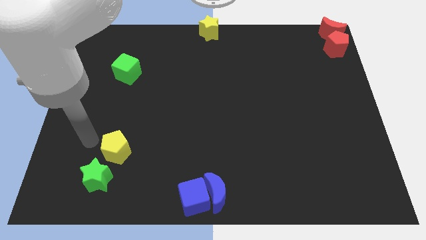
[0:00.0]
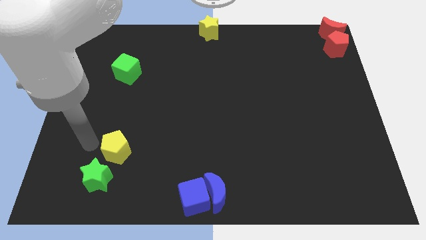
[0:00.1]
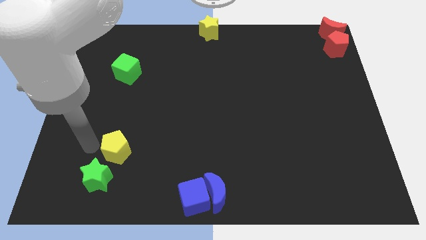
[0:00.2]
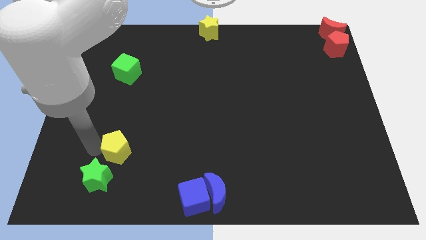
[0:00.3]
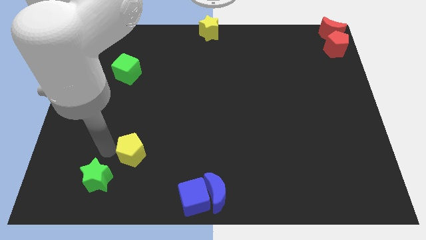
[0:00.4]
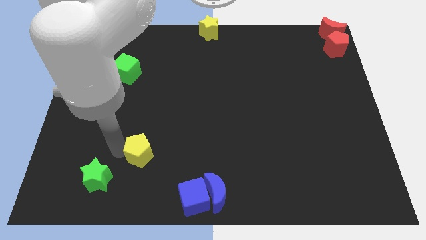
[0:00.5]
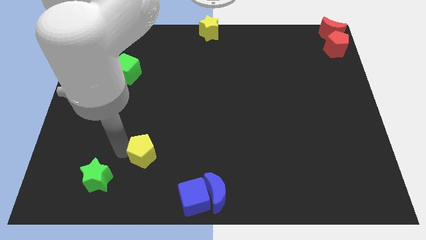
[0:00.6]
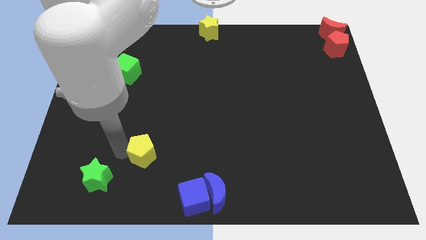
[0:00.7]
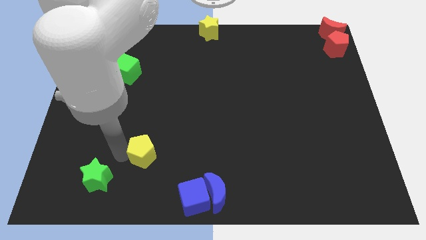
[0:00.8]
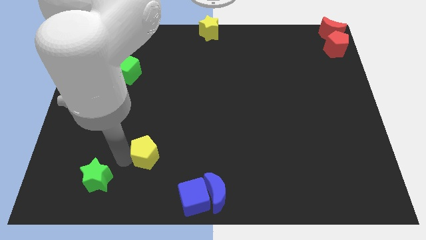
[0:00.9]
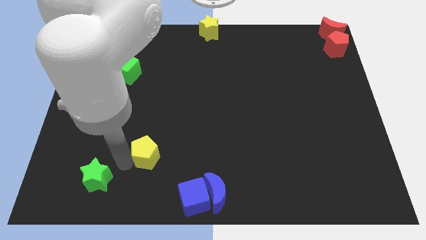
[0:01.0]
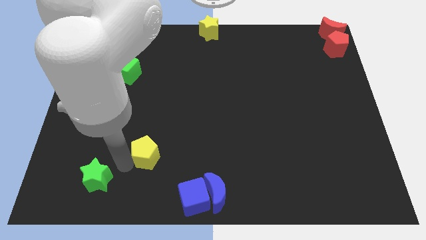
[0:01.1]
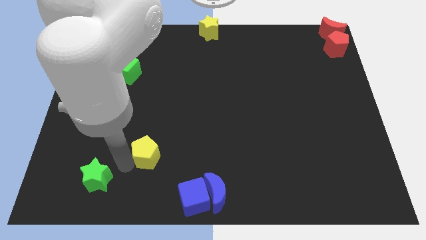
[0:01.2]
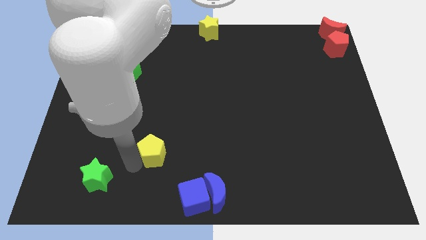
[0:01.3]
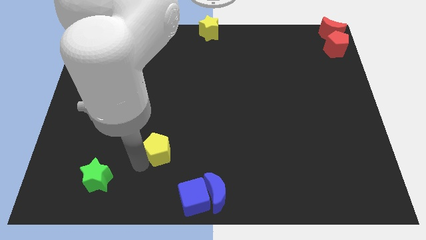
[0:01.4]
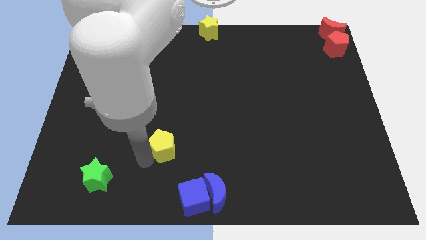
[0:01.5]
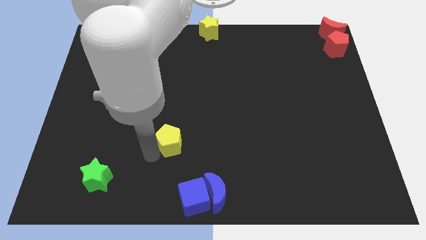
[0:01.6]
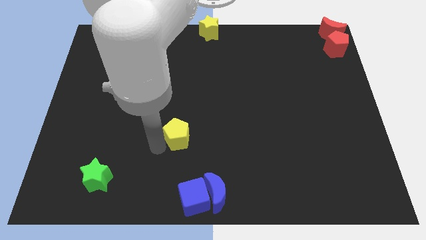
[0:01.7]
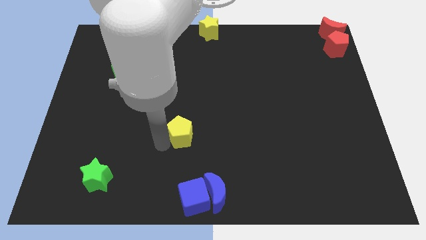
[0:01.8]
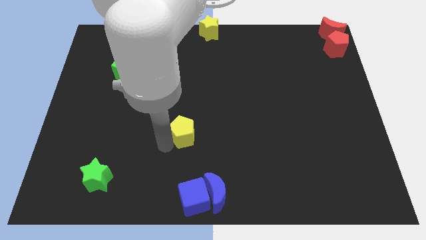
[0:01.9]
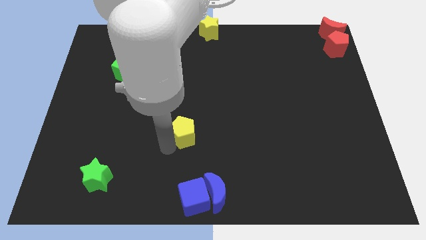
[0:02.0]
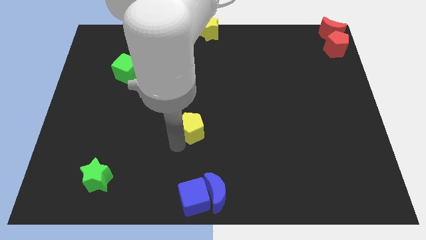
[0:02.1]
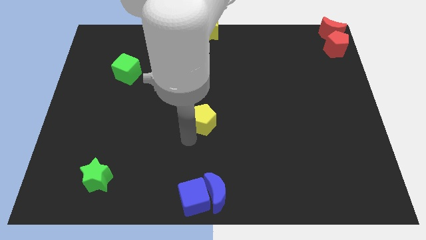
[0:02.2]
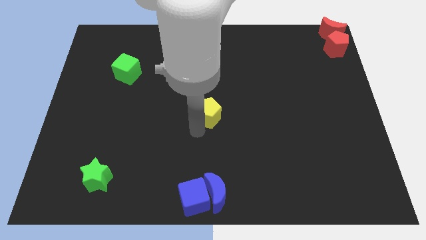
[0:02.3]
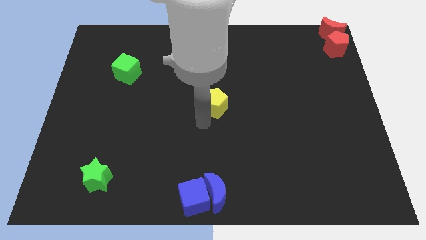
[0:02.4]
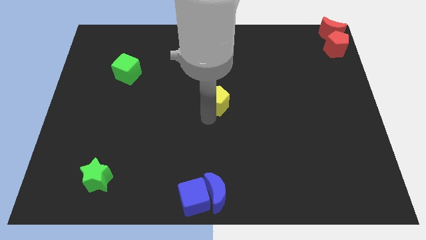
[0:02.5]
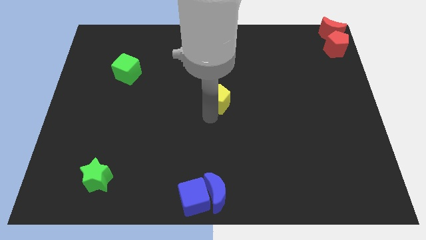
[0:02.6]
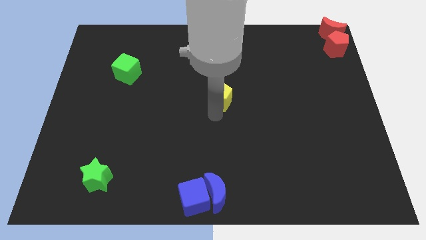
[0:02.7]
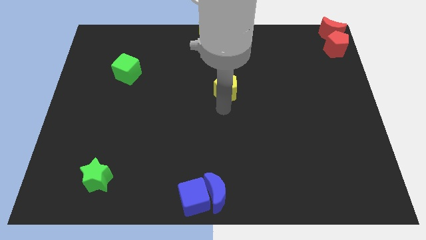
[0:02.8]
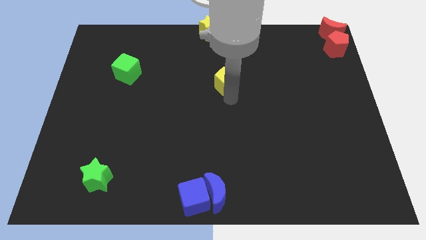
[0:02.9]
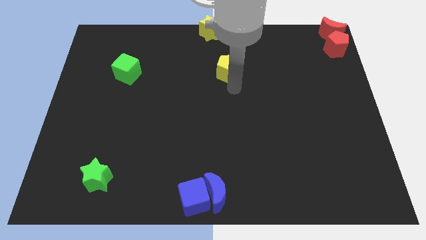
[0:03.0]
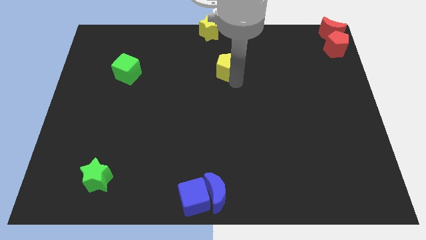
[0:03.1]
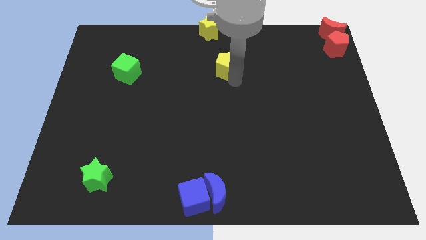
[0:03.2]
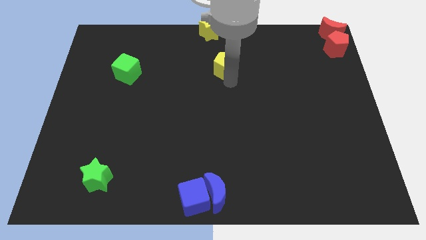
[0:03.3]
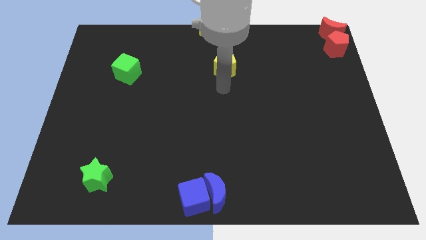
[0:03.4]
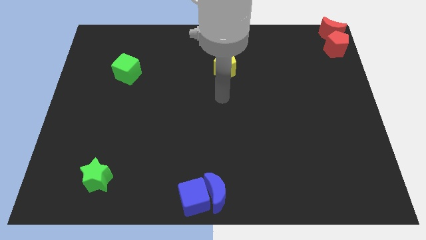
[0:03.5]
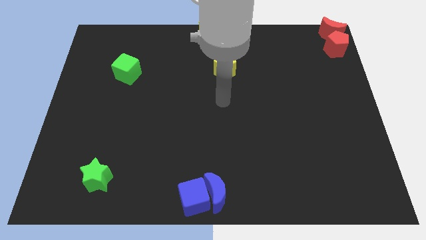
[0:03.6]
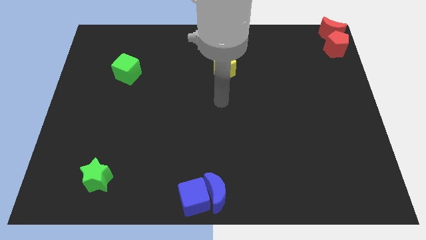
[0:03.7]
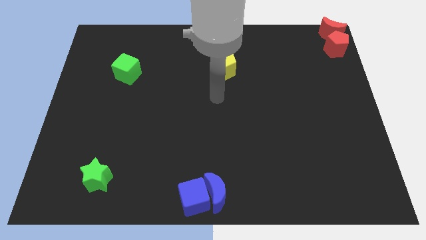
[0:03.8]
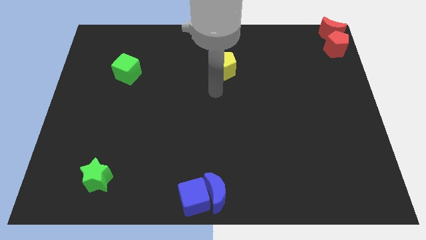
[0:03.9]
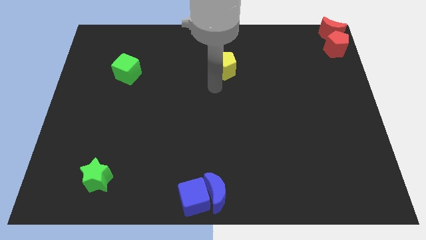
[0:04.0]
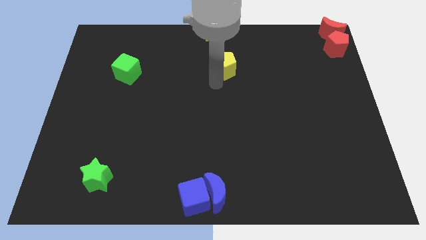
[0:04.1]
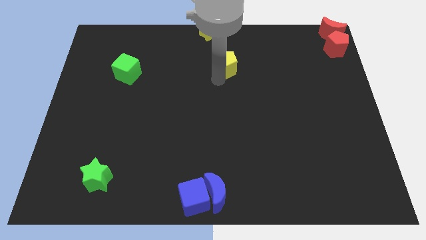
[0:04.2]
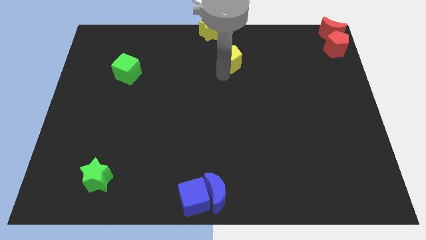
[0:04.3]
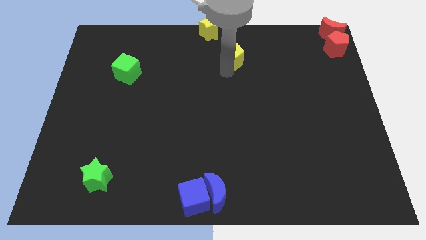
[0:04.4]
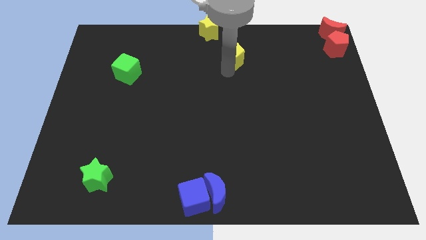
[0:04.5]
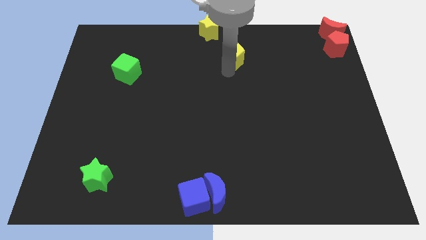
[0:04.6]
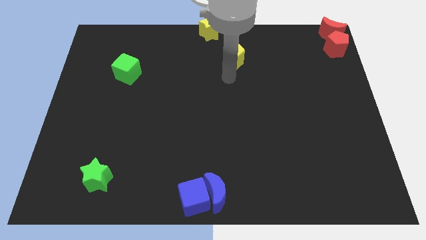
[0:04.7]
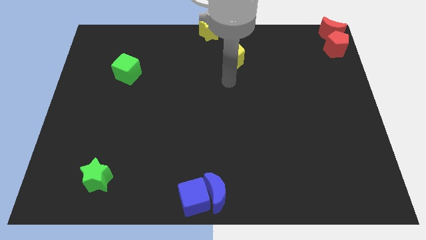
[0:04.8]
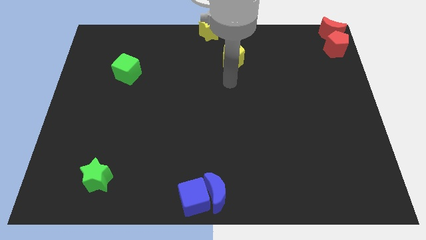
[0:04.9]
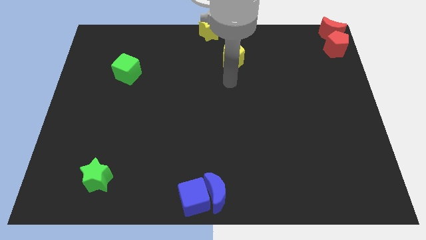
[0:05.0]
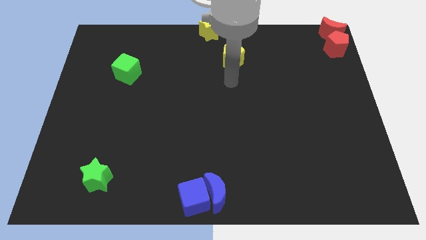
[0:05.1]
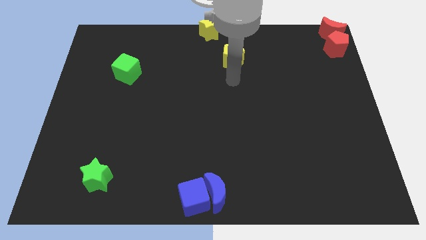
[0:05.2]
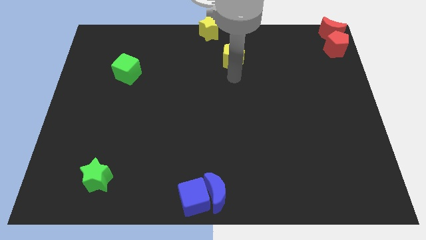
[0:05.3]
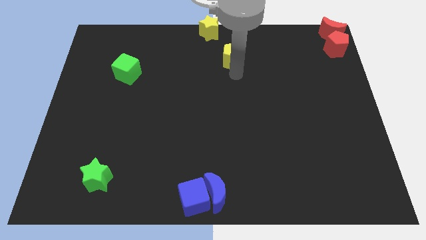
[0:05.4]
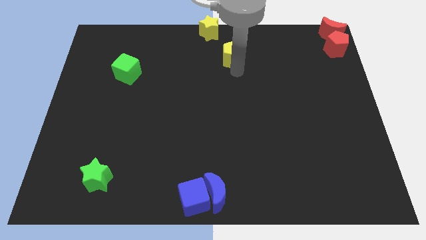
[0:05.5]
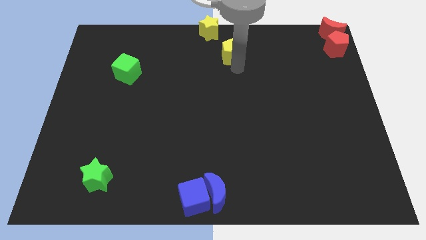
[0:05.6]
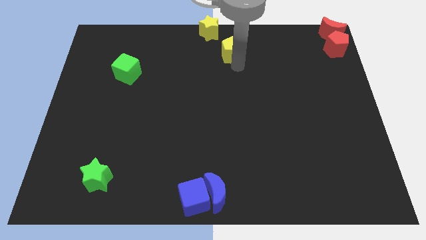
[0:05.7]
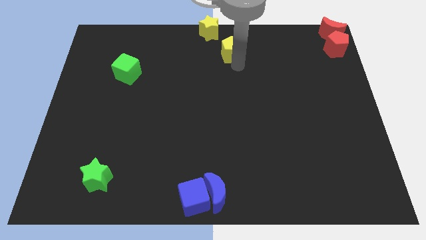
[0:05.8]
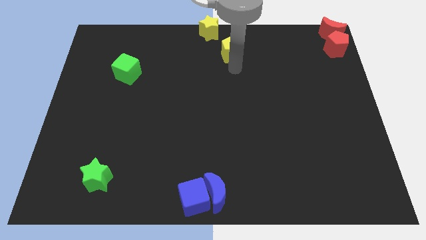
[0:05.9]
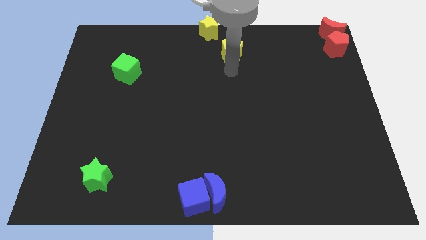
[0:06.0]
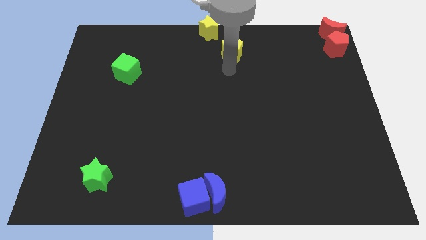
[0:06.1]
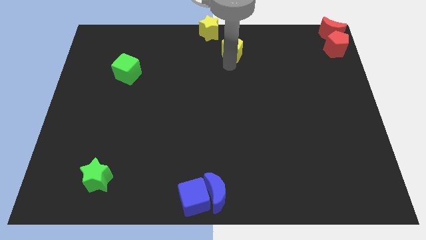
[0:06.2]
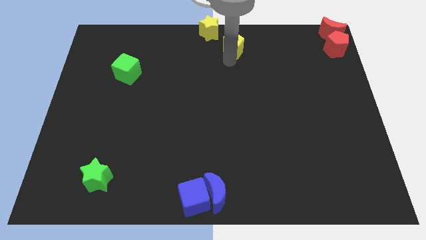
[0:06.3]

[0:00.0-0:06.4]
push the yellow pentagon towards the top center of the board

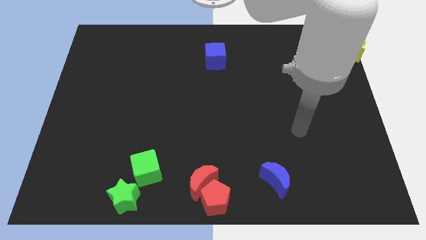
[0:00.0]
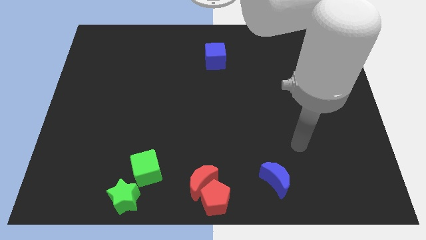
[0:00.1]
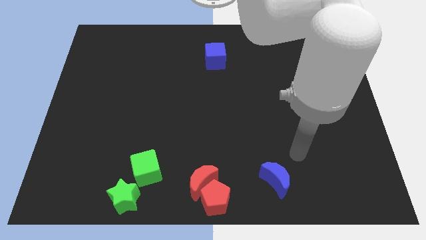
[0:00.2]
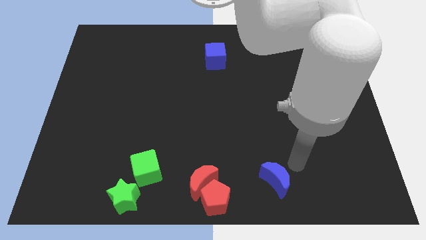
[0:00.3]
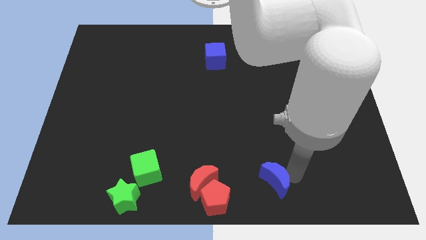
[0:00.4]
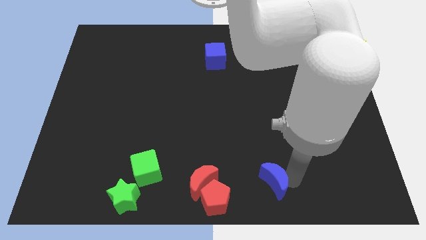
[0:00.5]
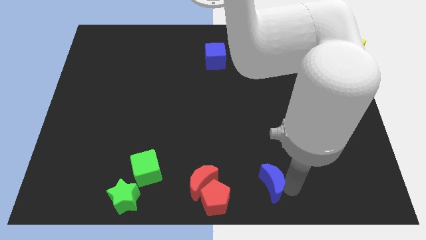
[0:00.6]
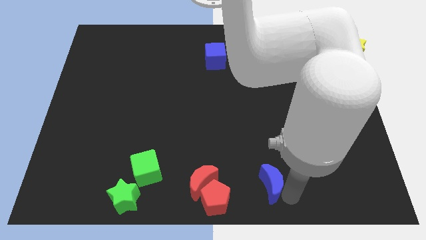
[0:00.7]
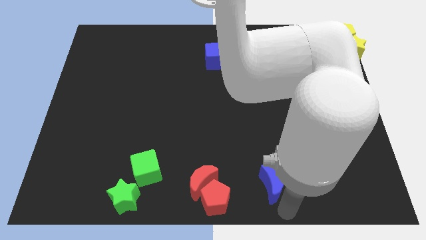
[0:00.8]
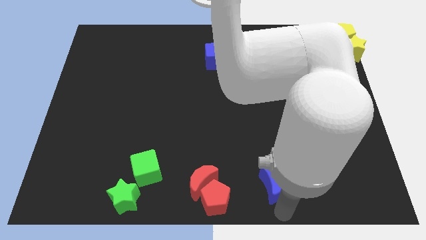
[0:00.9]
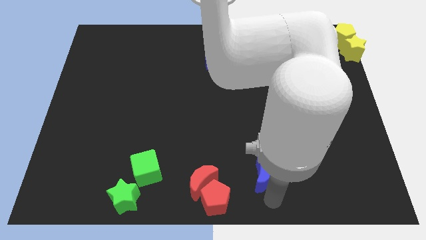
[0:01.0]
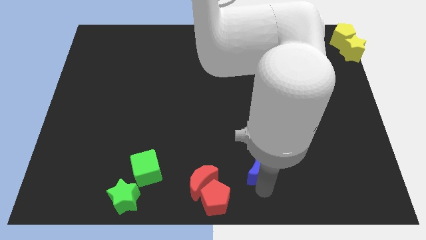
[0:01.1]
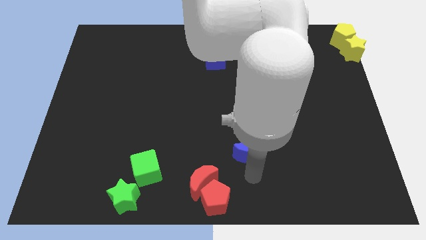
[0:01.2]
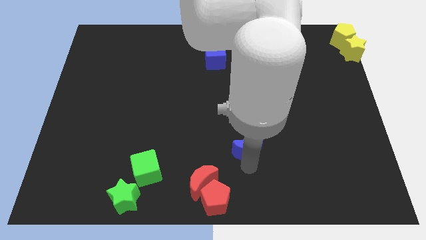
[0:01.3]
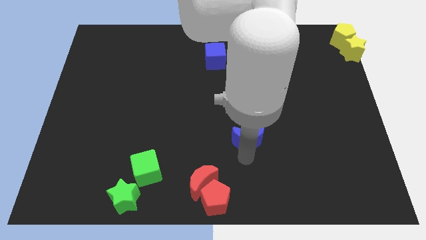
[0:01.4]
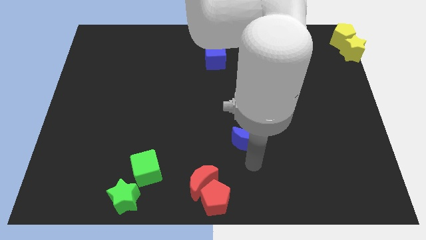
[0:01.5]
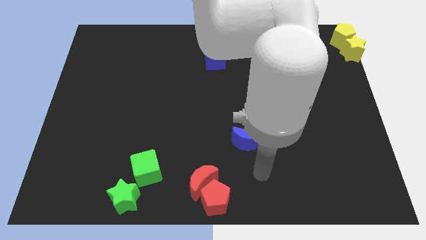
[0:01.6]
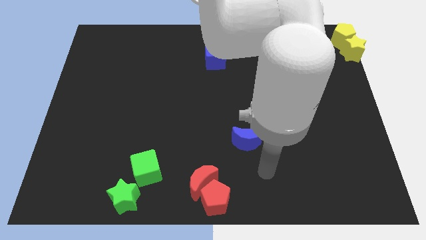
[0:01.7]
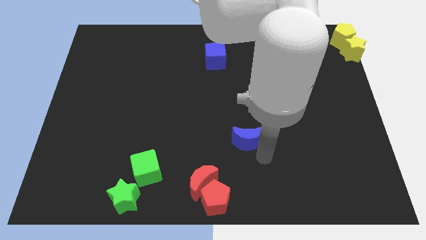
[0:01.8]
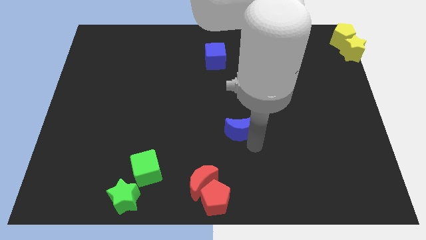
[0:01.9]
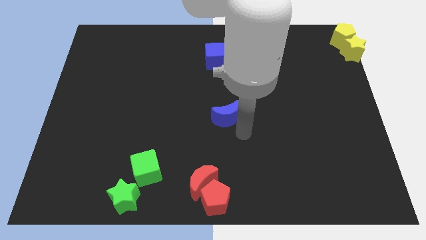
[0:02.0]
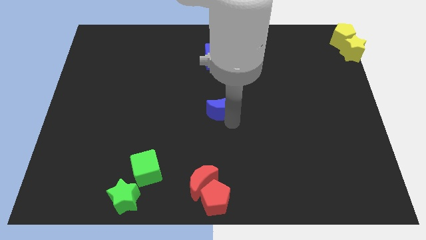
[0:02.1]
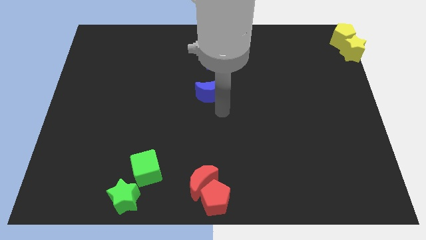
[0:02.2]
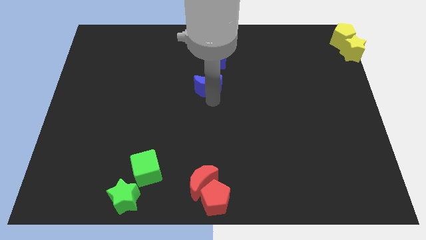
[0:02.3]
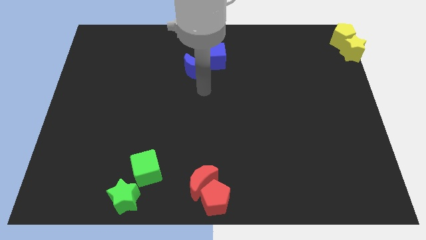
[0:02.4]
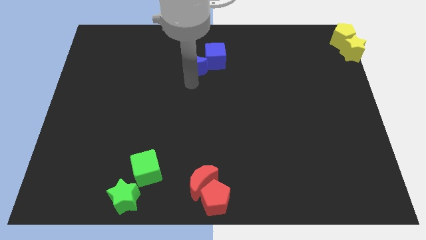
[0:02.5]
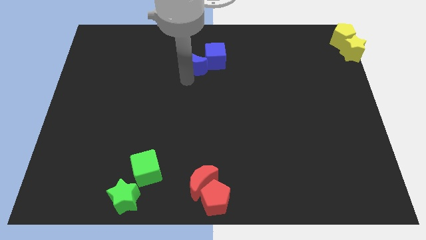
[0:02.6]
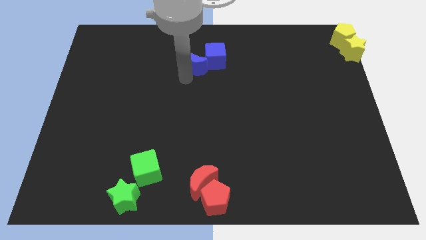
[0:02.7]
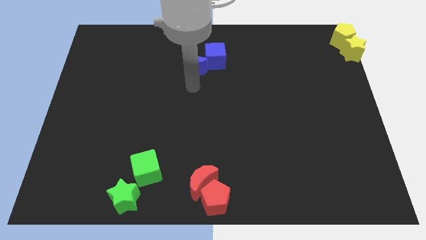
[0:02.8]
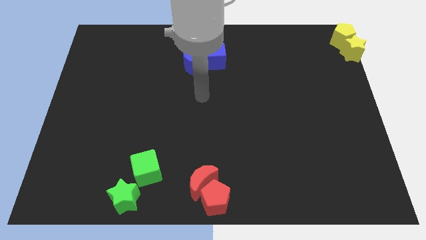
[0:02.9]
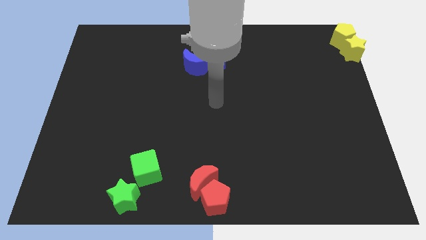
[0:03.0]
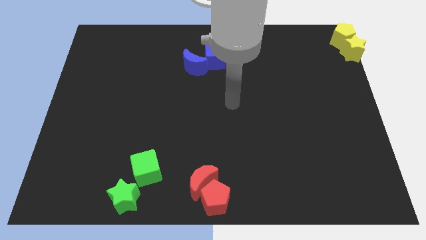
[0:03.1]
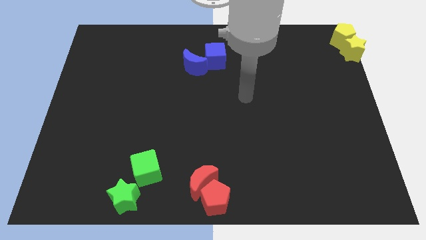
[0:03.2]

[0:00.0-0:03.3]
push the blue moon to the bottom left side of the blue cube
